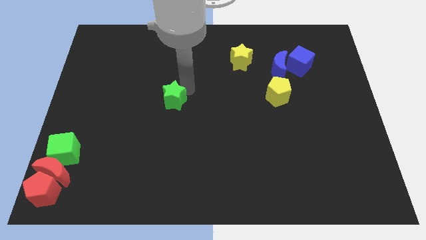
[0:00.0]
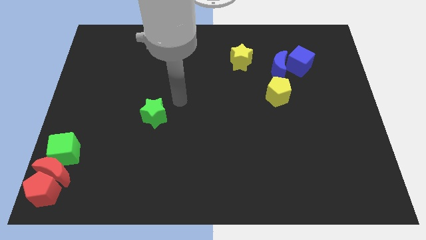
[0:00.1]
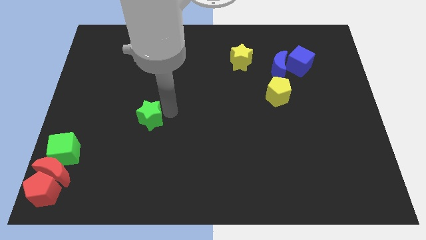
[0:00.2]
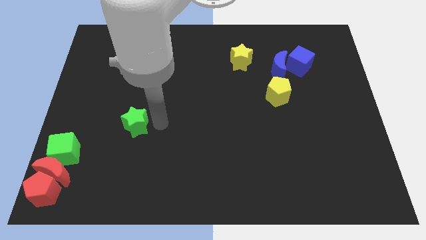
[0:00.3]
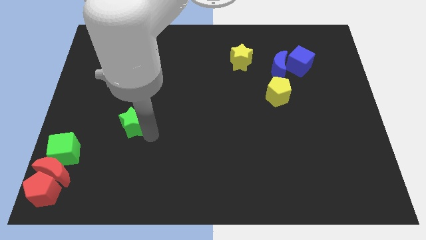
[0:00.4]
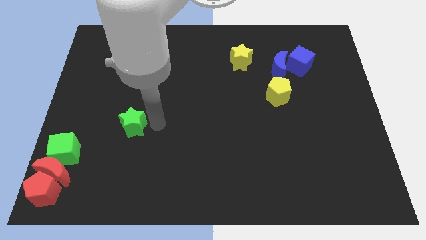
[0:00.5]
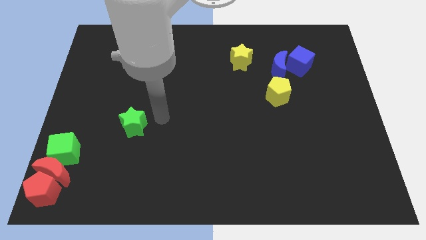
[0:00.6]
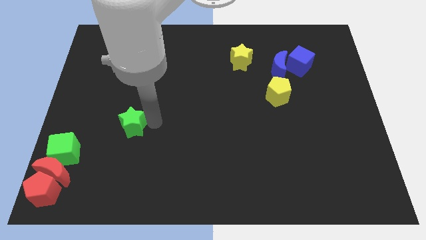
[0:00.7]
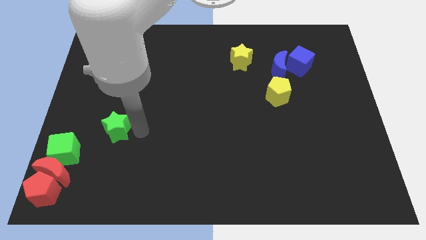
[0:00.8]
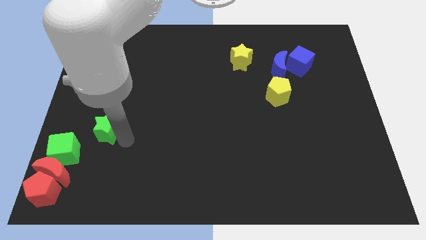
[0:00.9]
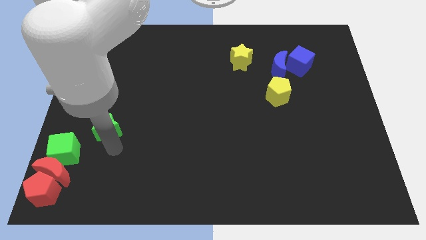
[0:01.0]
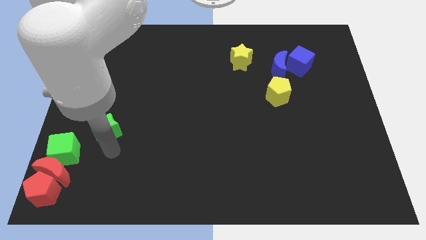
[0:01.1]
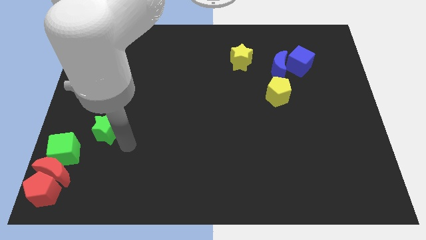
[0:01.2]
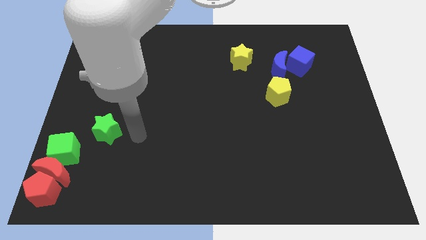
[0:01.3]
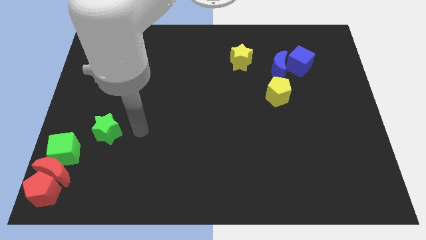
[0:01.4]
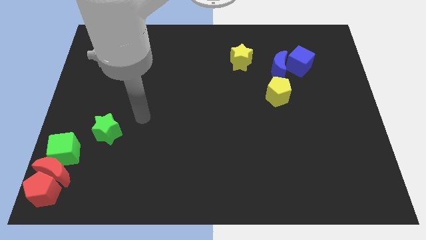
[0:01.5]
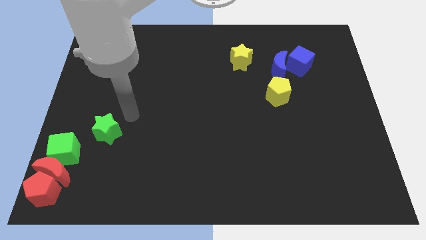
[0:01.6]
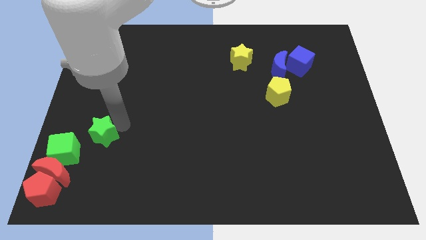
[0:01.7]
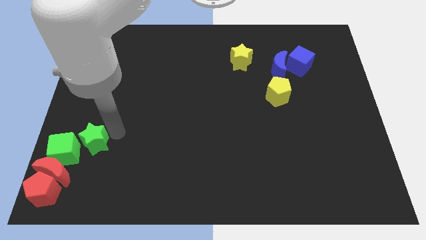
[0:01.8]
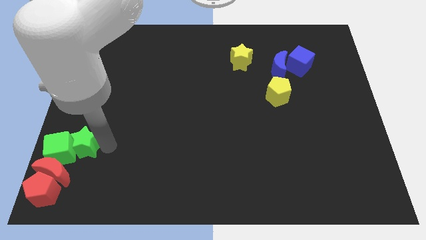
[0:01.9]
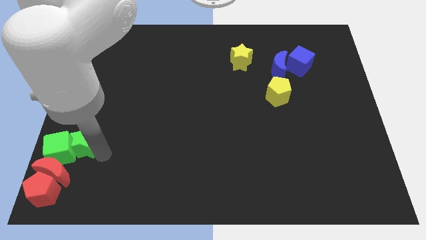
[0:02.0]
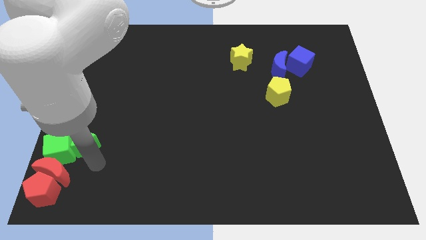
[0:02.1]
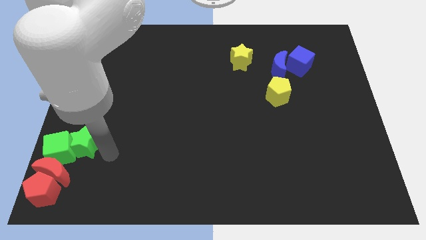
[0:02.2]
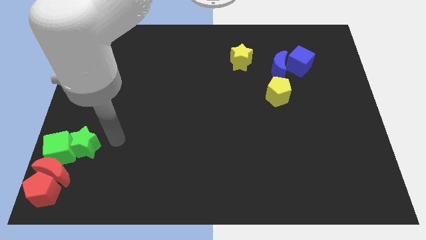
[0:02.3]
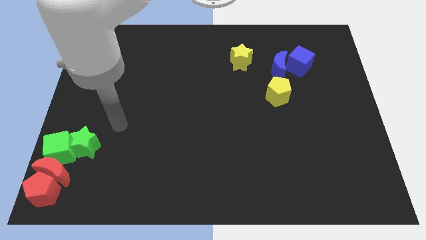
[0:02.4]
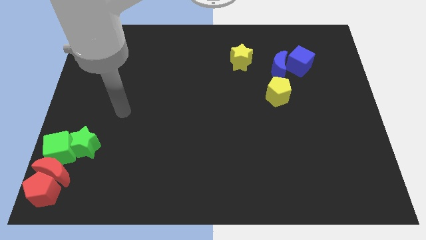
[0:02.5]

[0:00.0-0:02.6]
move the green star to the right of the green cube

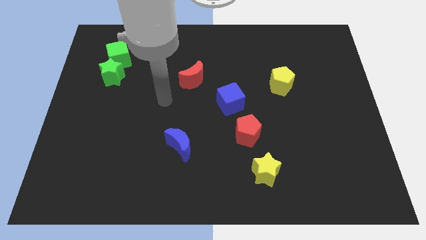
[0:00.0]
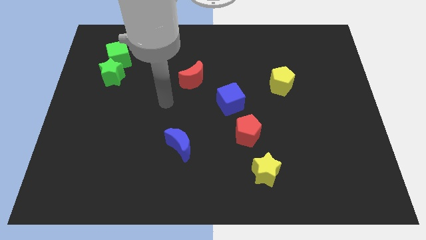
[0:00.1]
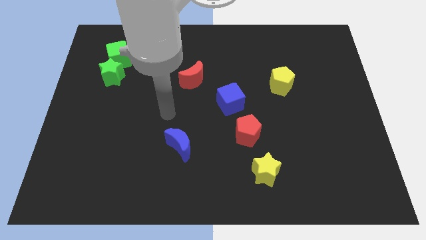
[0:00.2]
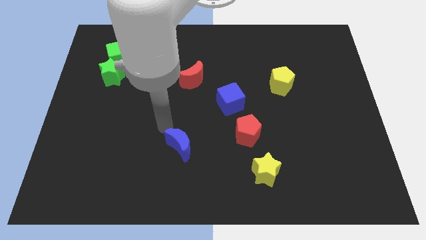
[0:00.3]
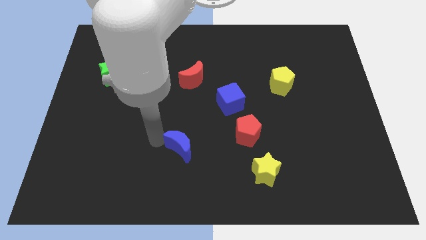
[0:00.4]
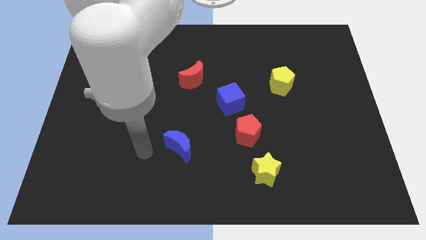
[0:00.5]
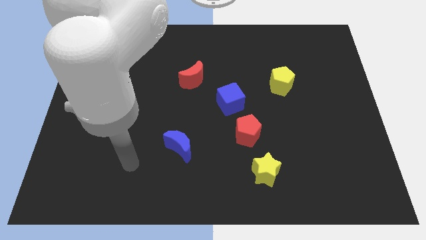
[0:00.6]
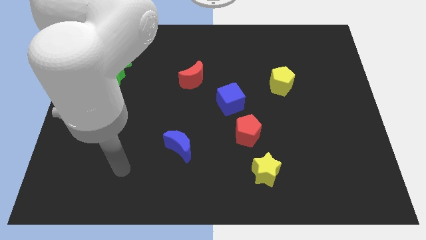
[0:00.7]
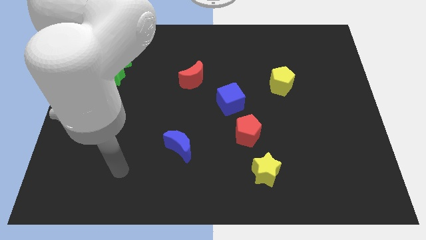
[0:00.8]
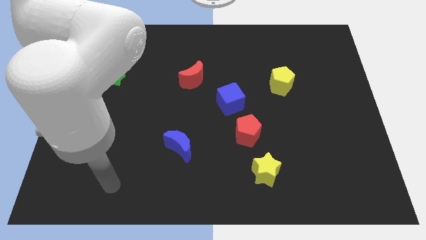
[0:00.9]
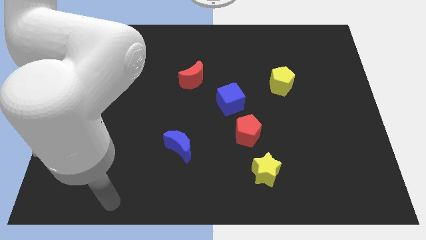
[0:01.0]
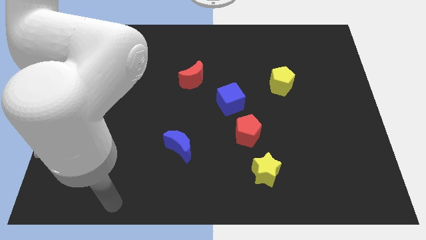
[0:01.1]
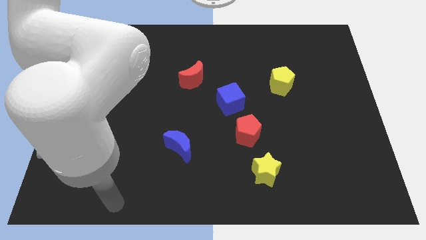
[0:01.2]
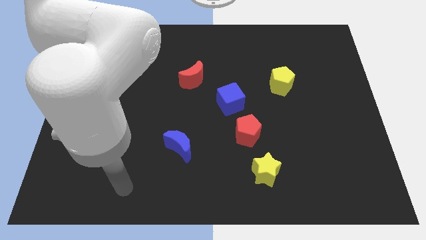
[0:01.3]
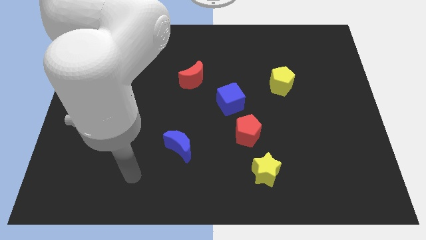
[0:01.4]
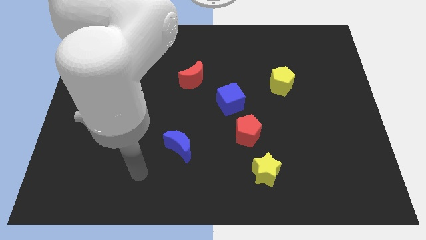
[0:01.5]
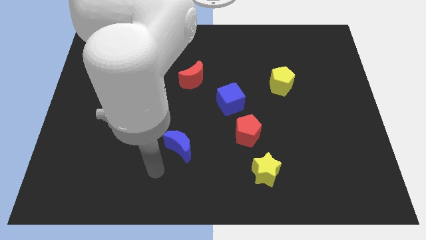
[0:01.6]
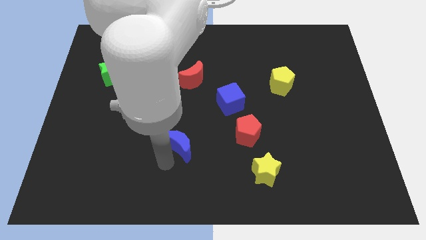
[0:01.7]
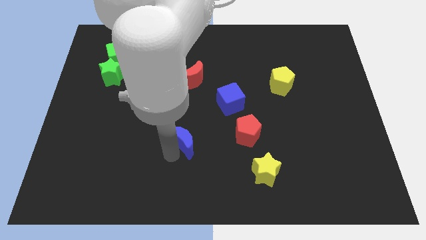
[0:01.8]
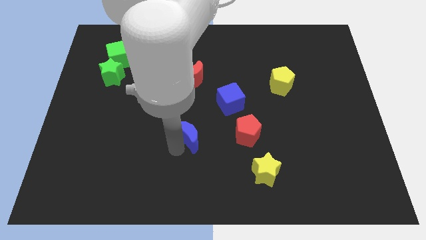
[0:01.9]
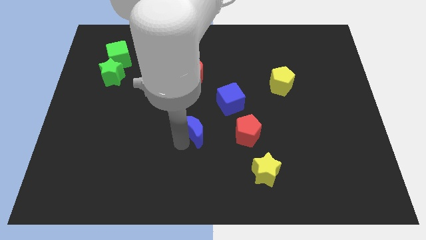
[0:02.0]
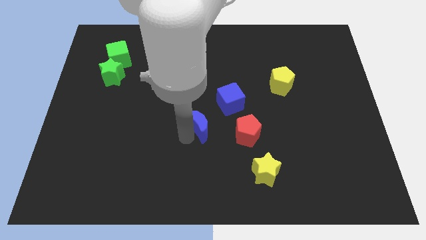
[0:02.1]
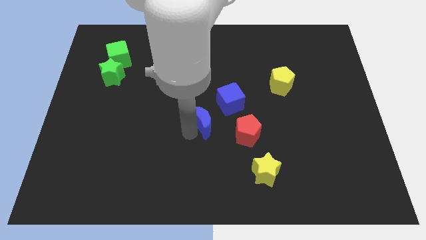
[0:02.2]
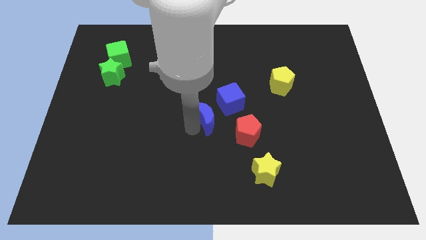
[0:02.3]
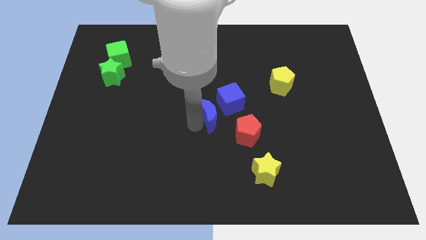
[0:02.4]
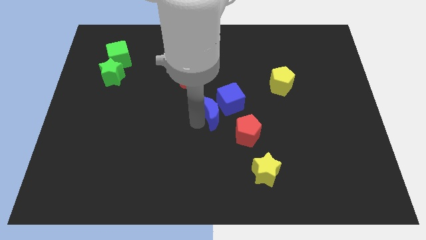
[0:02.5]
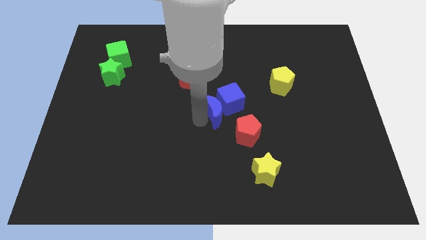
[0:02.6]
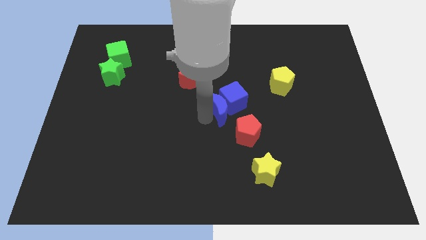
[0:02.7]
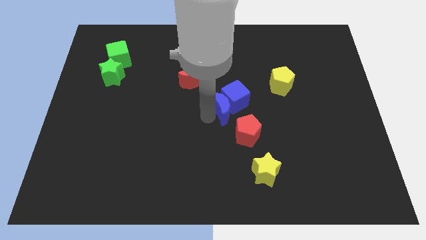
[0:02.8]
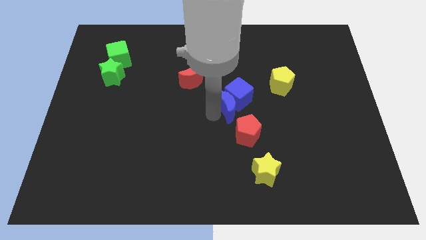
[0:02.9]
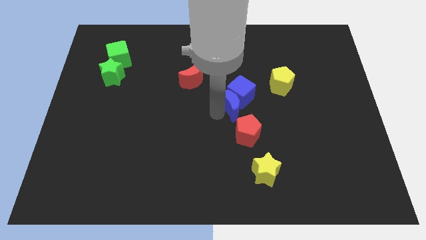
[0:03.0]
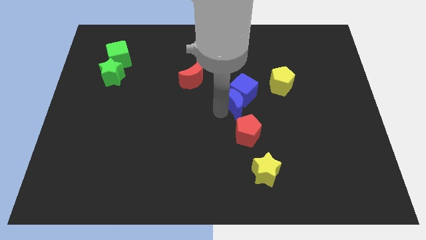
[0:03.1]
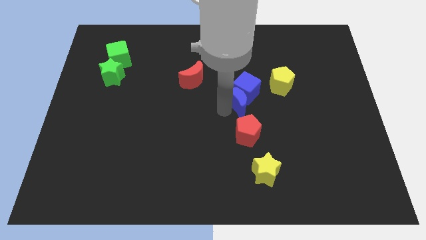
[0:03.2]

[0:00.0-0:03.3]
push the blue moon into the blue cube

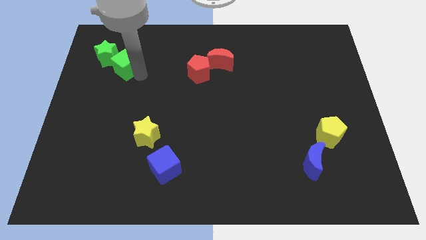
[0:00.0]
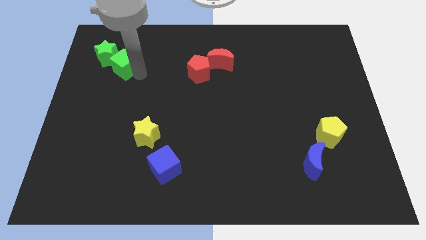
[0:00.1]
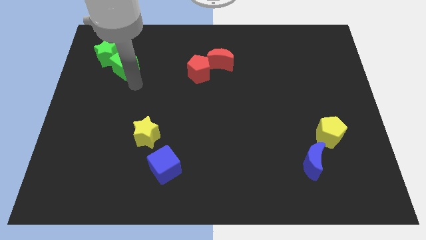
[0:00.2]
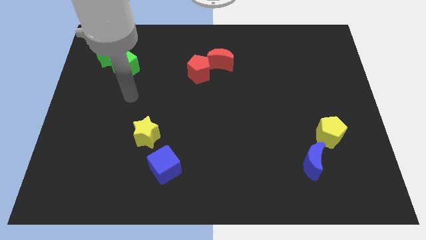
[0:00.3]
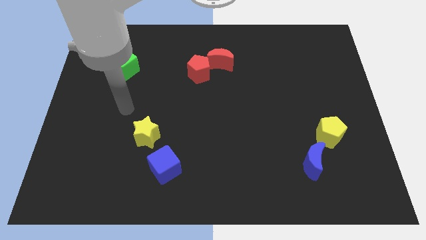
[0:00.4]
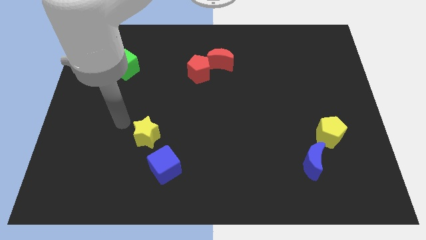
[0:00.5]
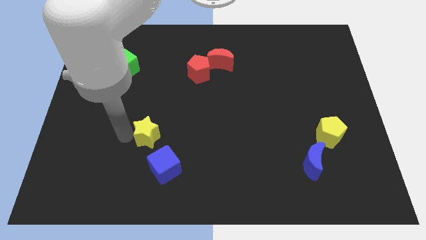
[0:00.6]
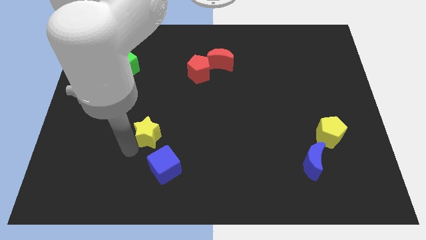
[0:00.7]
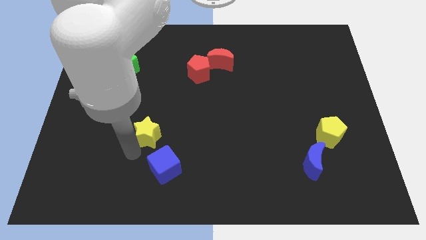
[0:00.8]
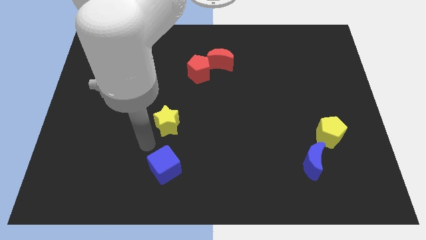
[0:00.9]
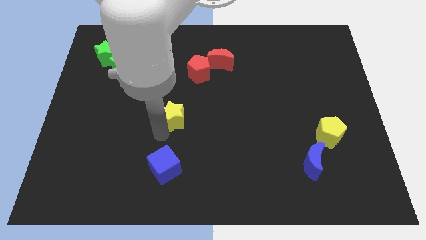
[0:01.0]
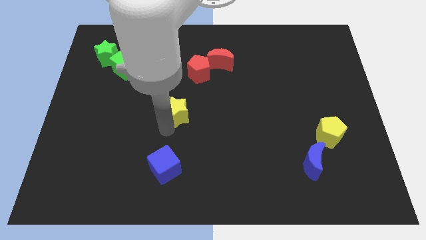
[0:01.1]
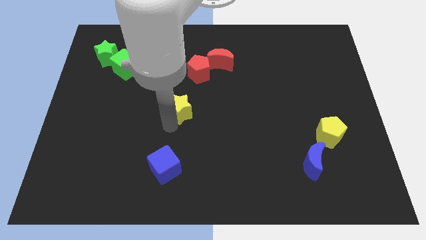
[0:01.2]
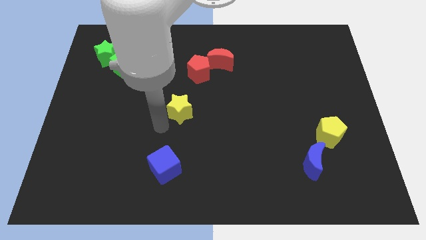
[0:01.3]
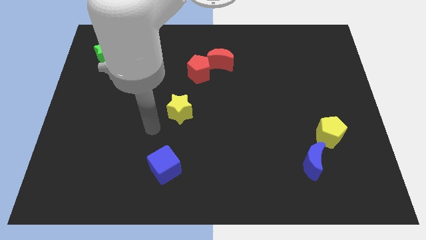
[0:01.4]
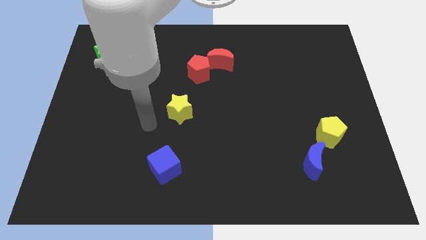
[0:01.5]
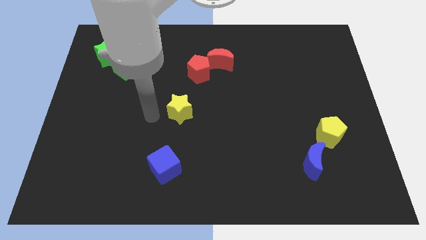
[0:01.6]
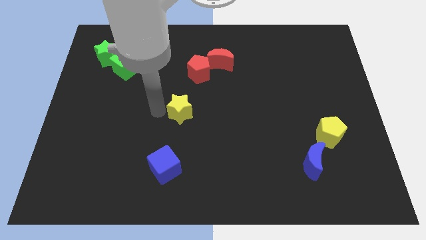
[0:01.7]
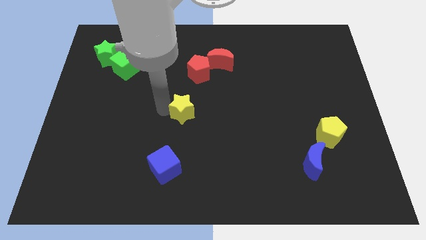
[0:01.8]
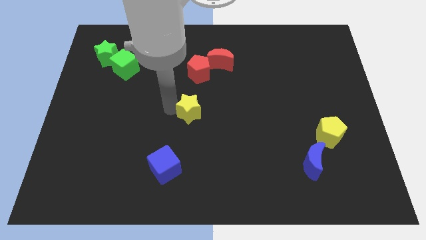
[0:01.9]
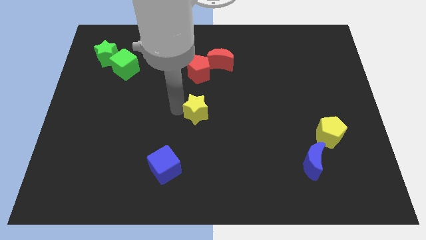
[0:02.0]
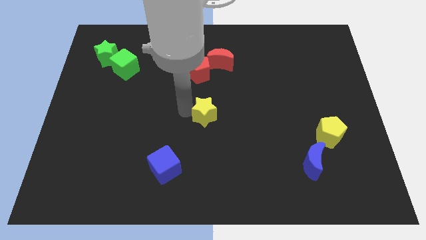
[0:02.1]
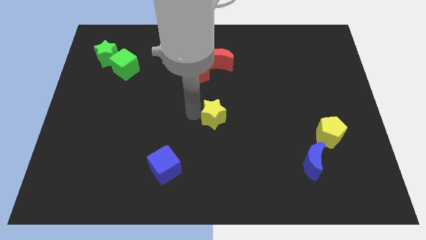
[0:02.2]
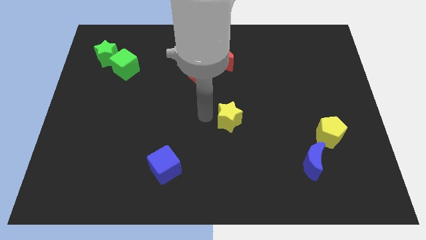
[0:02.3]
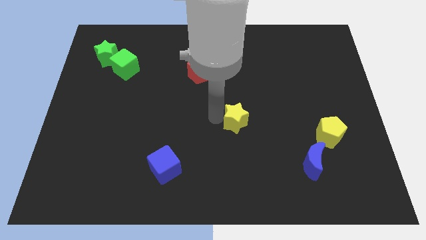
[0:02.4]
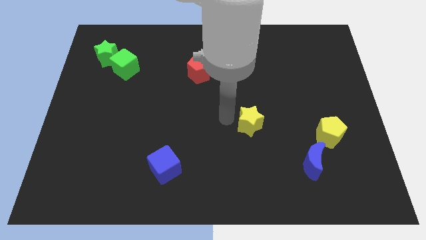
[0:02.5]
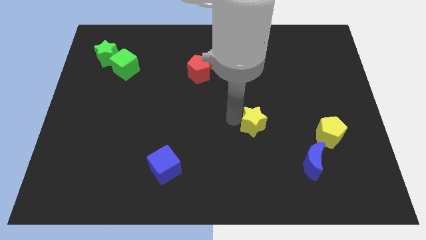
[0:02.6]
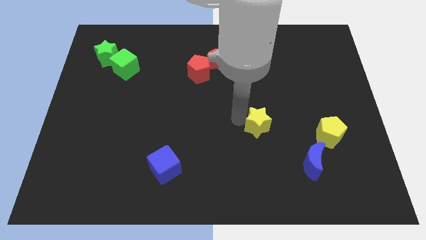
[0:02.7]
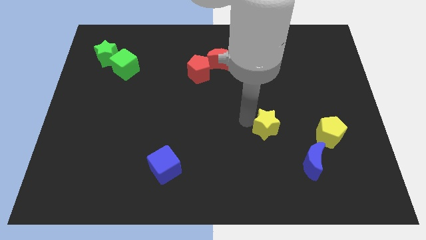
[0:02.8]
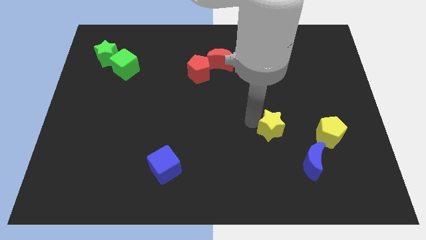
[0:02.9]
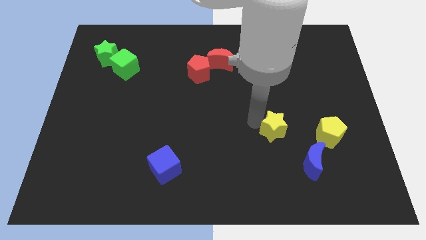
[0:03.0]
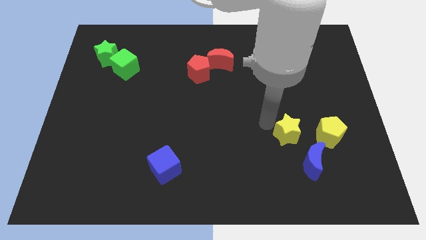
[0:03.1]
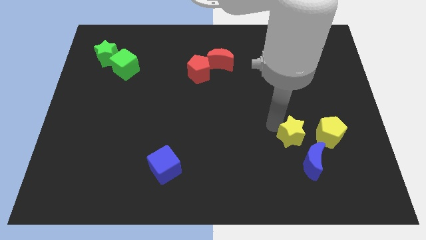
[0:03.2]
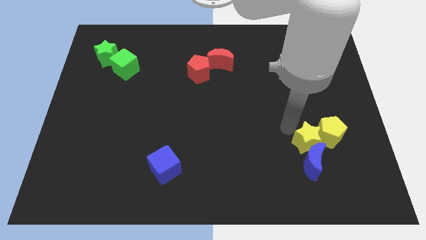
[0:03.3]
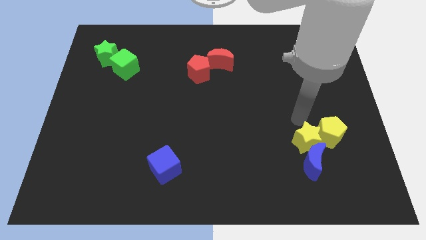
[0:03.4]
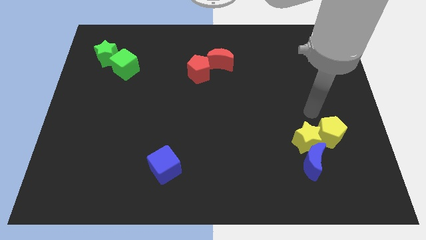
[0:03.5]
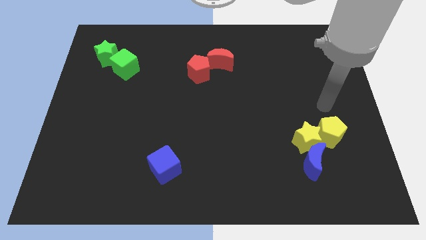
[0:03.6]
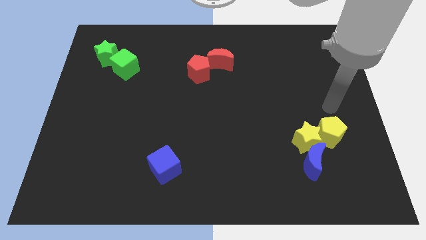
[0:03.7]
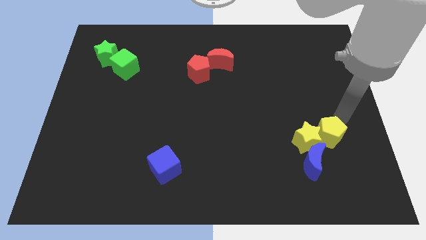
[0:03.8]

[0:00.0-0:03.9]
push the yellow star into the blue moon
